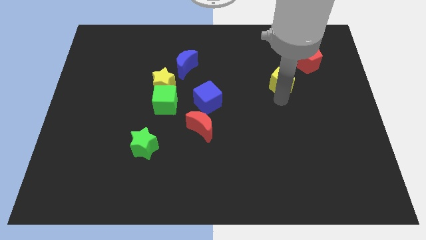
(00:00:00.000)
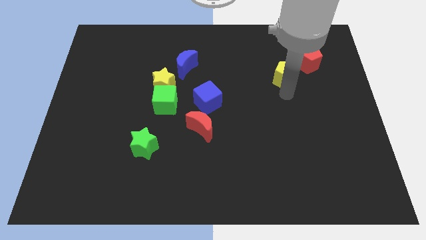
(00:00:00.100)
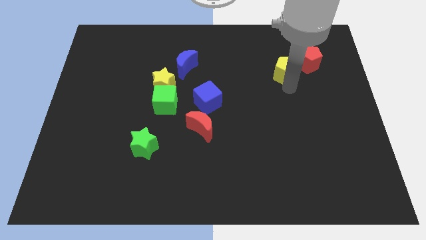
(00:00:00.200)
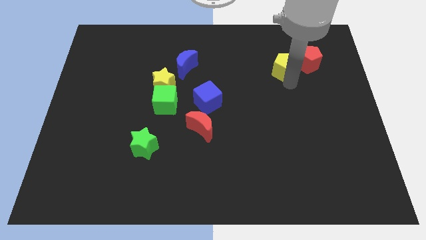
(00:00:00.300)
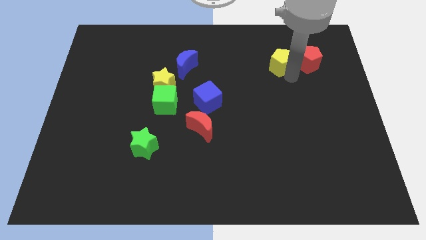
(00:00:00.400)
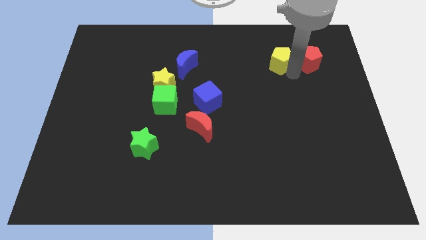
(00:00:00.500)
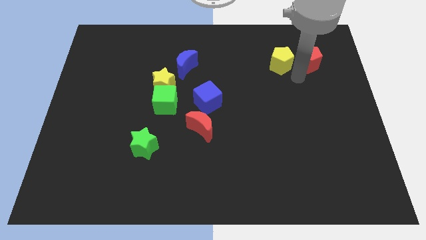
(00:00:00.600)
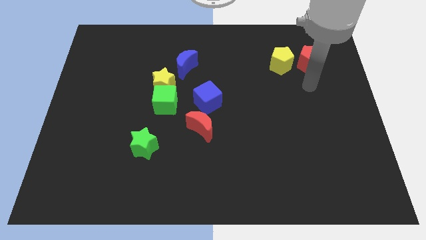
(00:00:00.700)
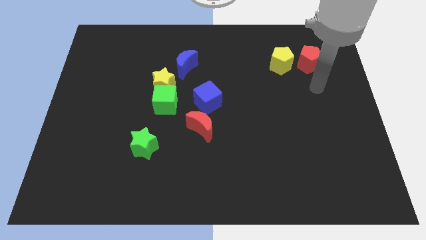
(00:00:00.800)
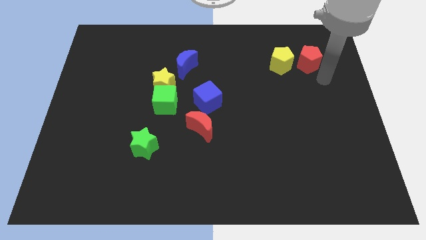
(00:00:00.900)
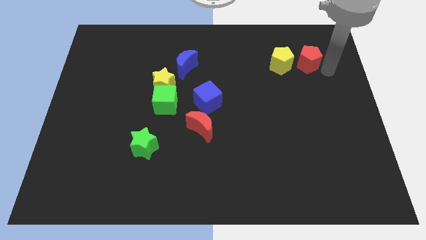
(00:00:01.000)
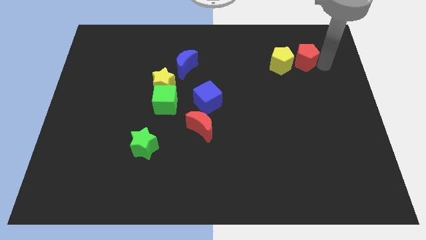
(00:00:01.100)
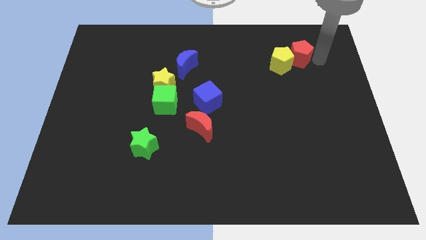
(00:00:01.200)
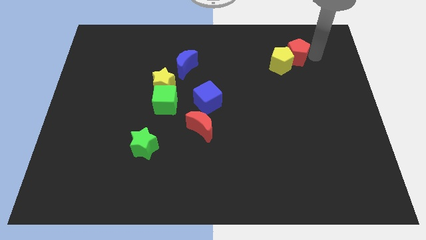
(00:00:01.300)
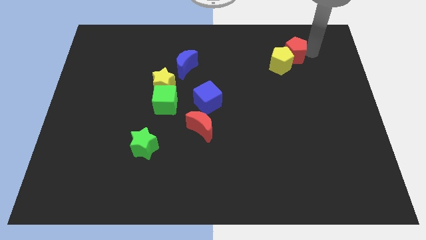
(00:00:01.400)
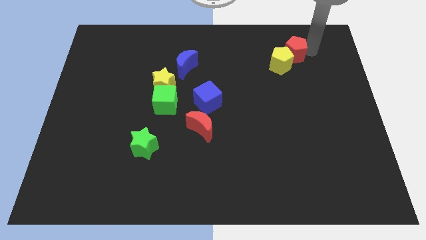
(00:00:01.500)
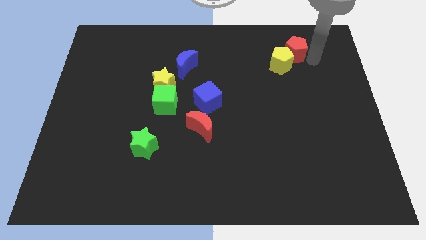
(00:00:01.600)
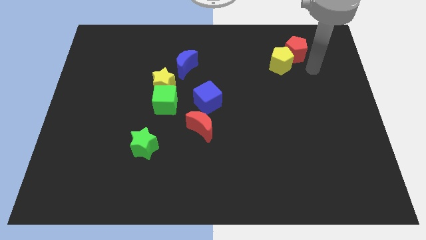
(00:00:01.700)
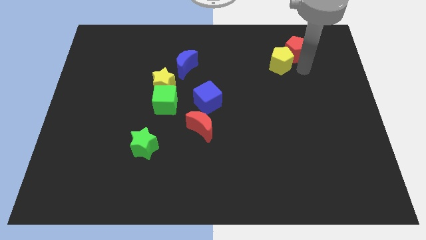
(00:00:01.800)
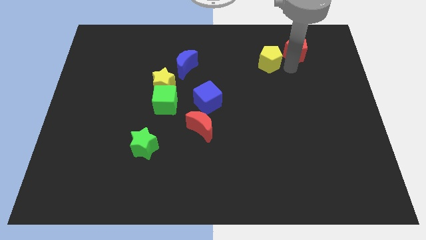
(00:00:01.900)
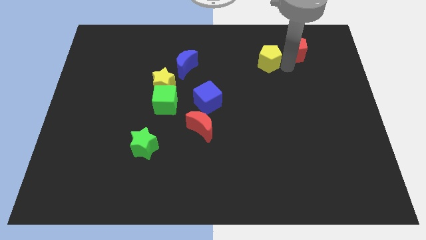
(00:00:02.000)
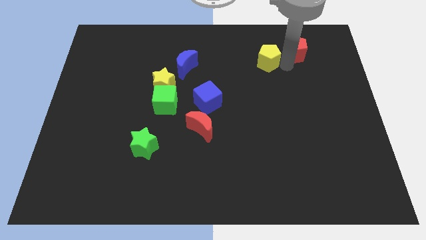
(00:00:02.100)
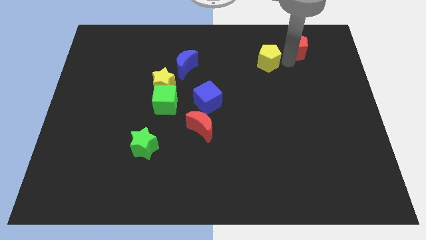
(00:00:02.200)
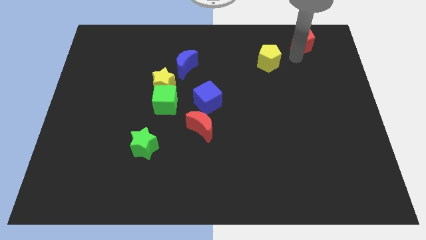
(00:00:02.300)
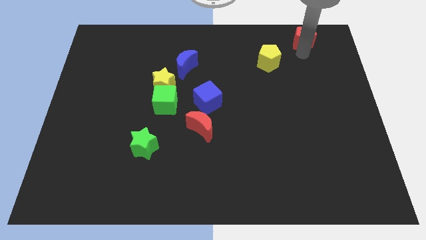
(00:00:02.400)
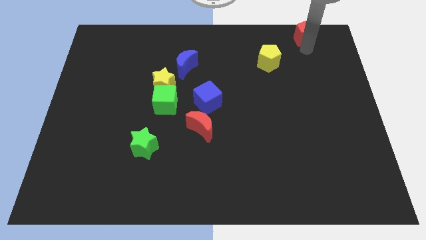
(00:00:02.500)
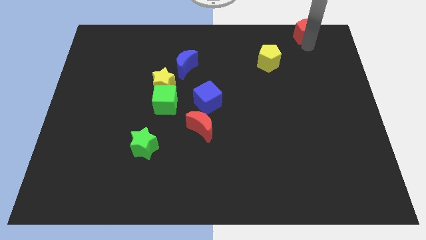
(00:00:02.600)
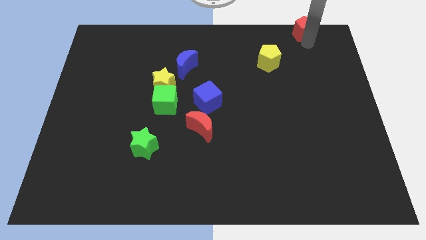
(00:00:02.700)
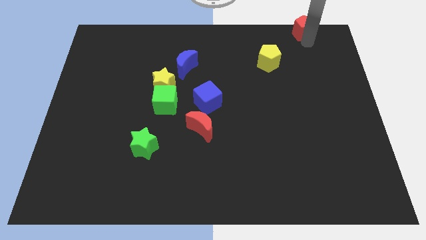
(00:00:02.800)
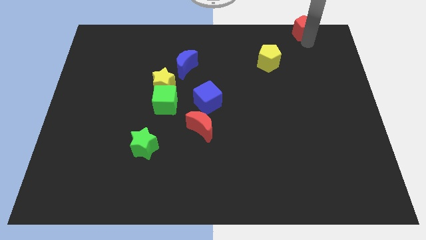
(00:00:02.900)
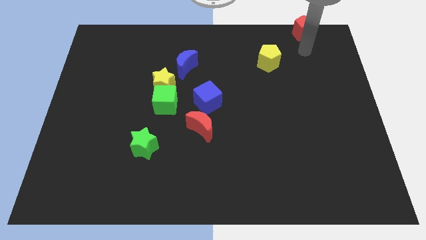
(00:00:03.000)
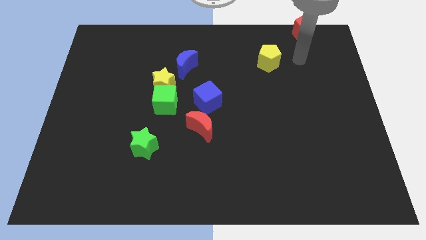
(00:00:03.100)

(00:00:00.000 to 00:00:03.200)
place red pentagon towards upwards

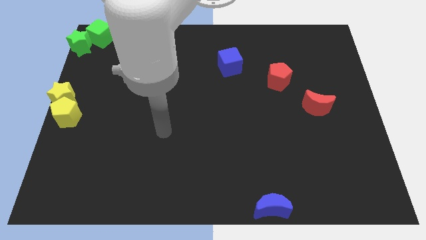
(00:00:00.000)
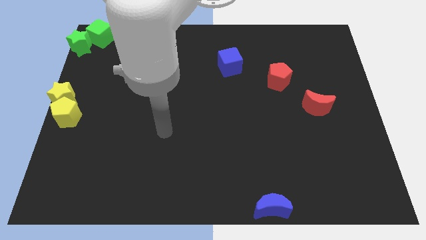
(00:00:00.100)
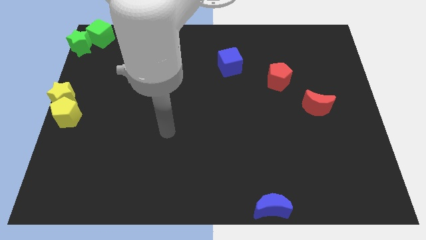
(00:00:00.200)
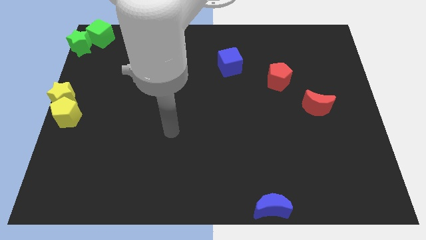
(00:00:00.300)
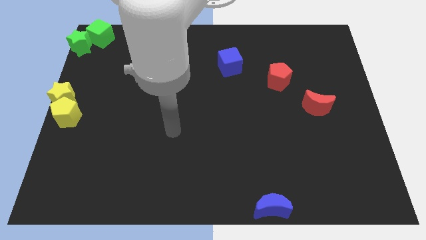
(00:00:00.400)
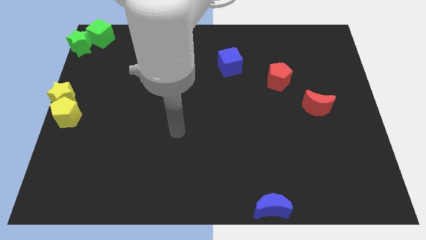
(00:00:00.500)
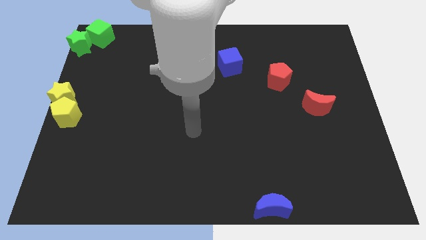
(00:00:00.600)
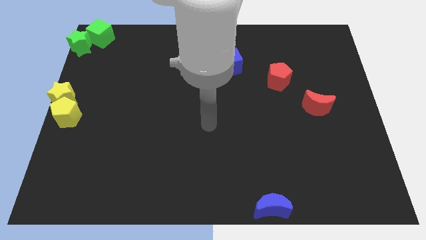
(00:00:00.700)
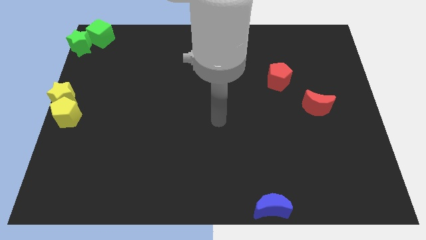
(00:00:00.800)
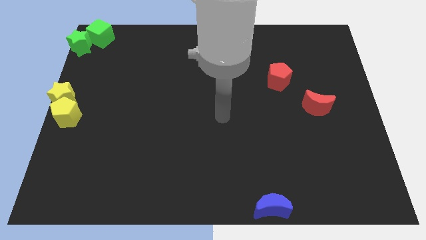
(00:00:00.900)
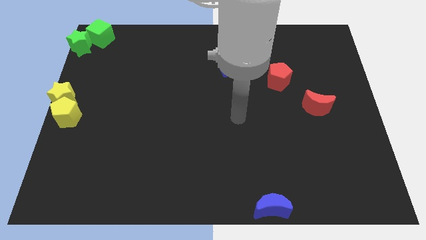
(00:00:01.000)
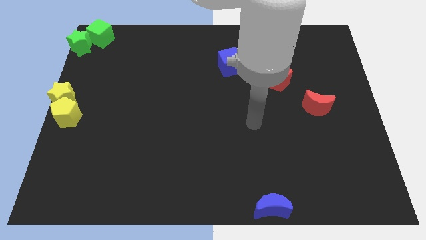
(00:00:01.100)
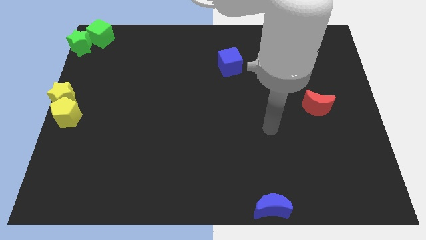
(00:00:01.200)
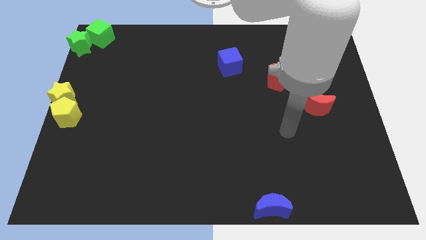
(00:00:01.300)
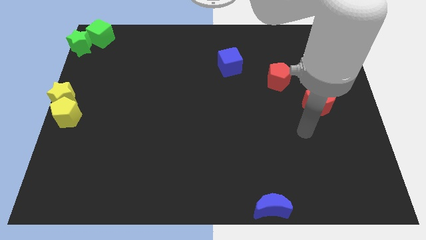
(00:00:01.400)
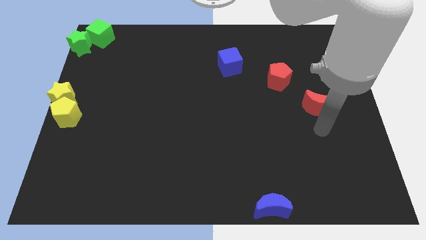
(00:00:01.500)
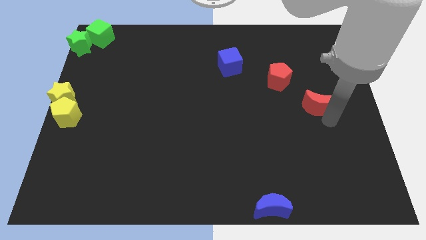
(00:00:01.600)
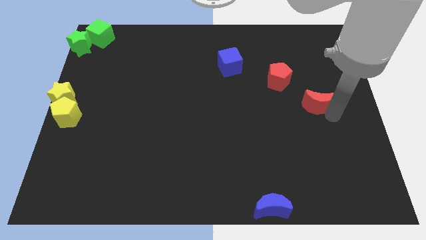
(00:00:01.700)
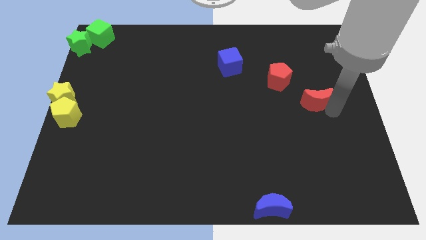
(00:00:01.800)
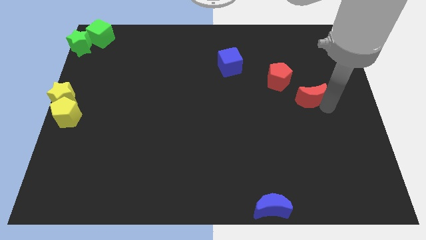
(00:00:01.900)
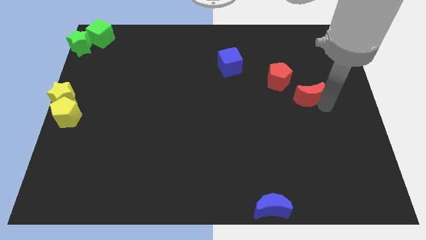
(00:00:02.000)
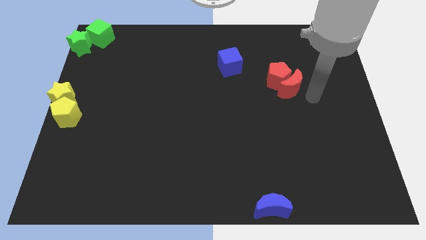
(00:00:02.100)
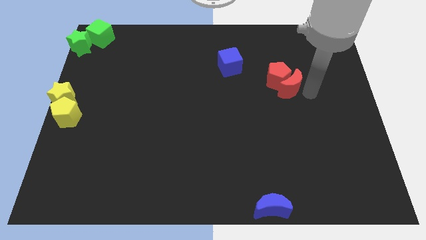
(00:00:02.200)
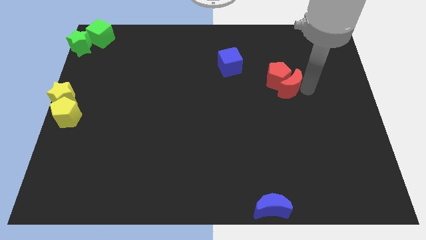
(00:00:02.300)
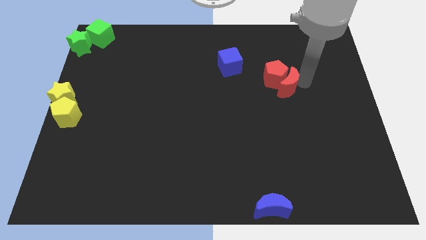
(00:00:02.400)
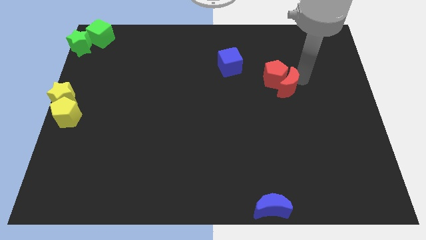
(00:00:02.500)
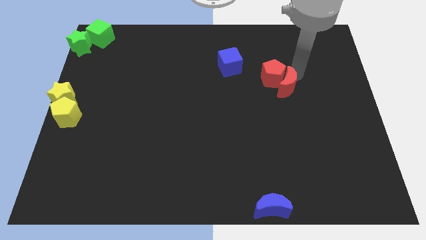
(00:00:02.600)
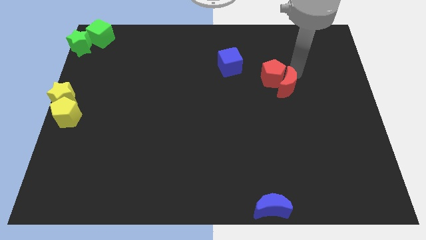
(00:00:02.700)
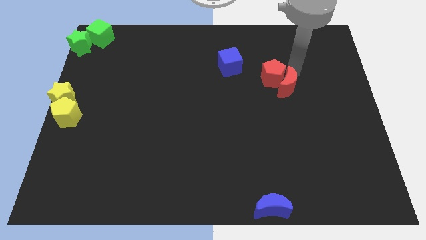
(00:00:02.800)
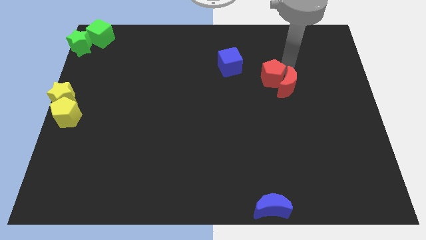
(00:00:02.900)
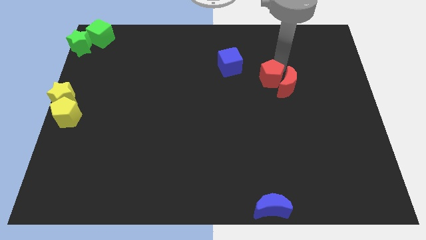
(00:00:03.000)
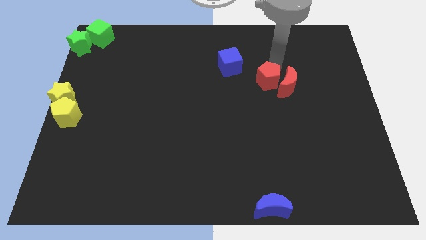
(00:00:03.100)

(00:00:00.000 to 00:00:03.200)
place red moon right to red pentagon

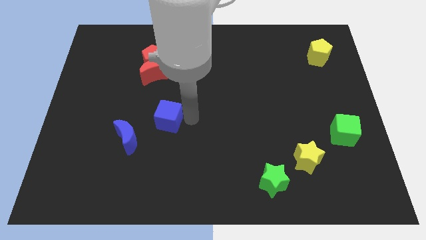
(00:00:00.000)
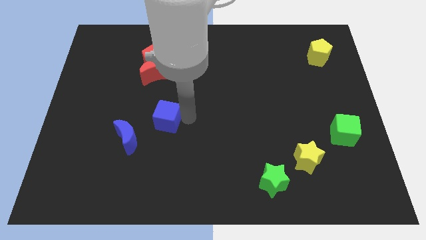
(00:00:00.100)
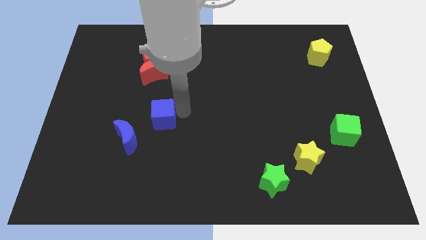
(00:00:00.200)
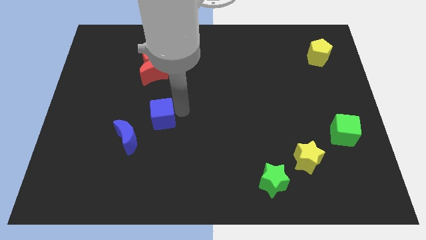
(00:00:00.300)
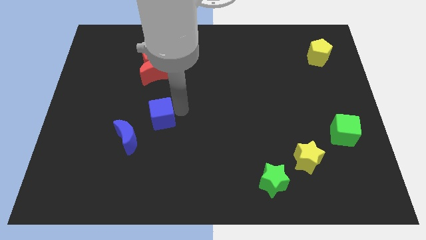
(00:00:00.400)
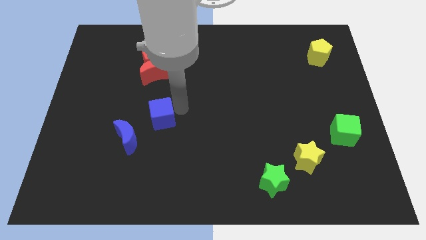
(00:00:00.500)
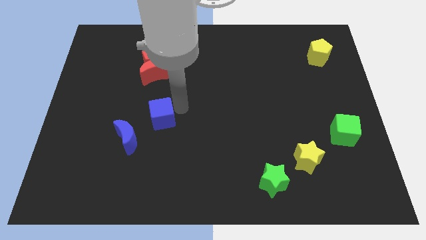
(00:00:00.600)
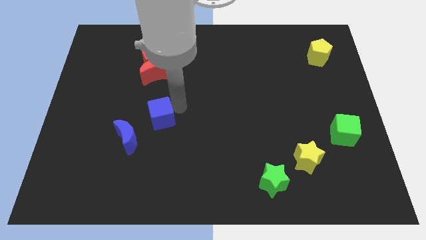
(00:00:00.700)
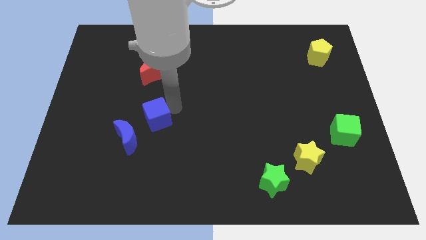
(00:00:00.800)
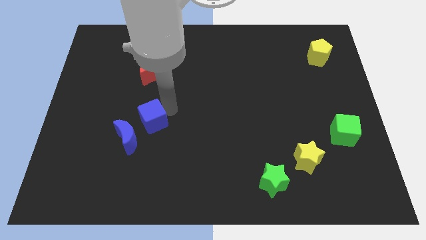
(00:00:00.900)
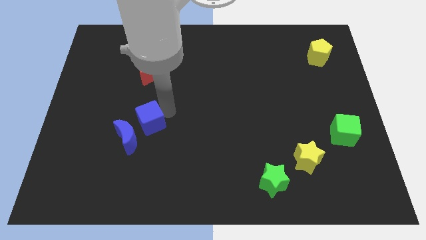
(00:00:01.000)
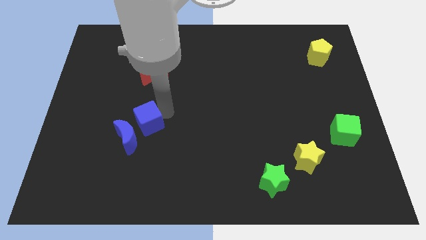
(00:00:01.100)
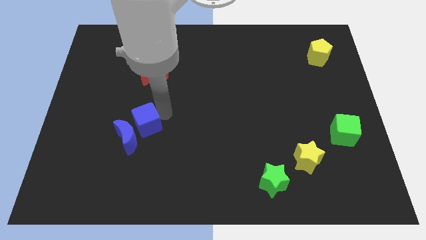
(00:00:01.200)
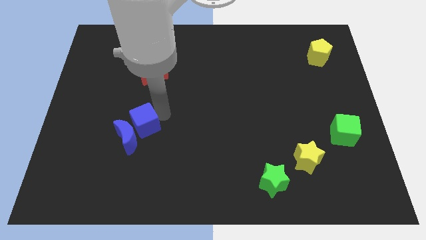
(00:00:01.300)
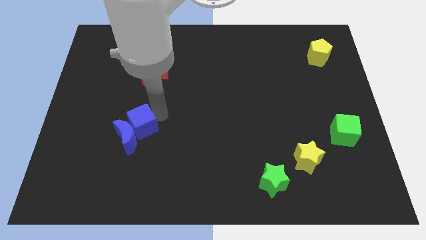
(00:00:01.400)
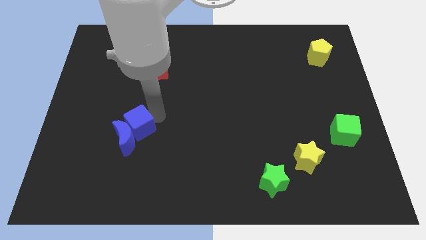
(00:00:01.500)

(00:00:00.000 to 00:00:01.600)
attach the blue cube to the blue moon

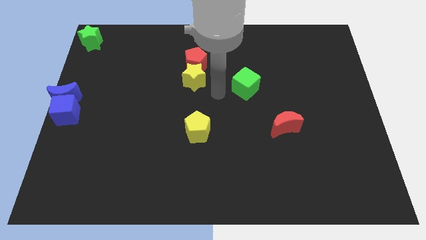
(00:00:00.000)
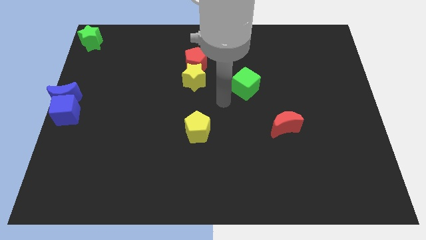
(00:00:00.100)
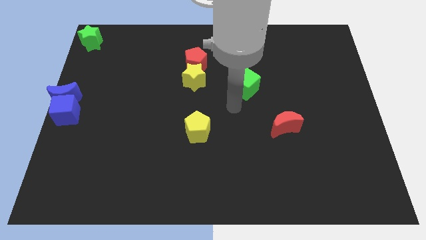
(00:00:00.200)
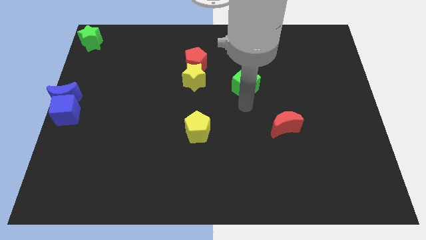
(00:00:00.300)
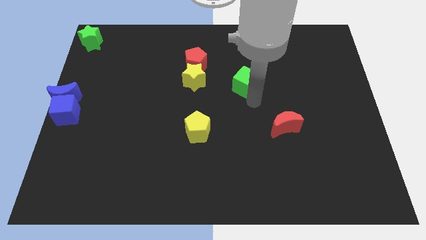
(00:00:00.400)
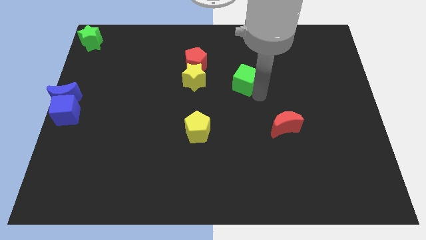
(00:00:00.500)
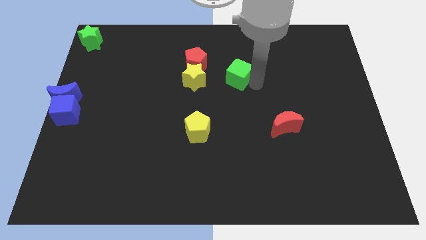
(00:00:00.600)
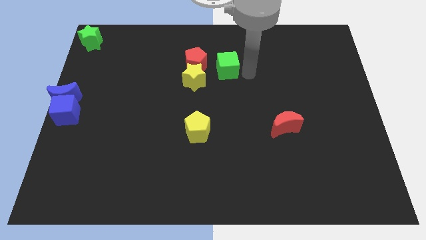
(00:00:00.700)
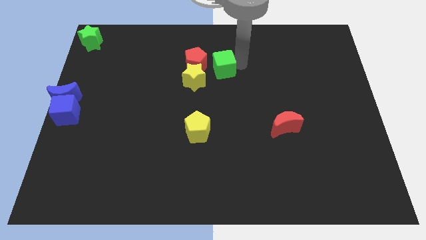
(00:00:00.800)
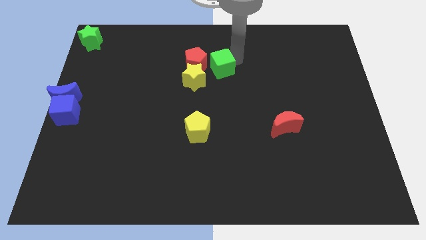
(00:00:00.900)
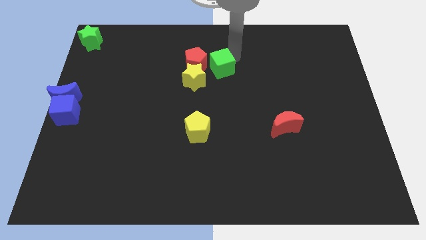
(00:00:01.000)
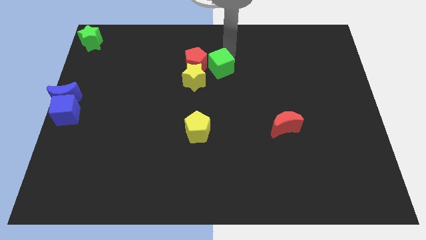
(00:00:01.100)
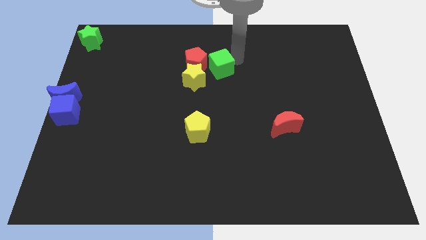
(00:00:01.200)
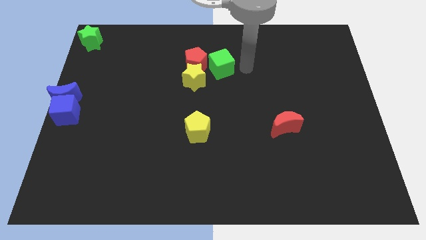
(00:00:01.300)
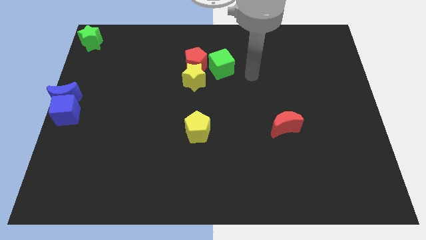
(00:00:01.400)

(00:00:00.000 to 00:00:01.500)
move the green cube to the right of the red pentagon
